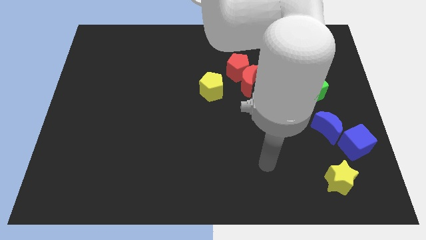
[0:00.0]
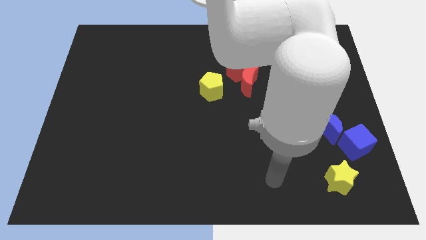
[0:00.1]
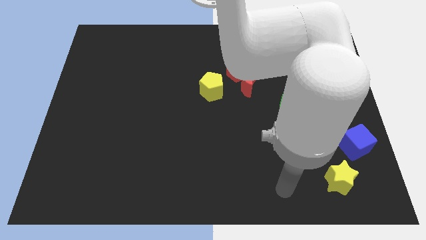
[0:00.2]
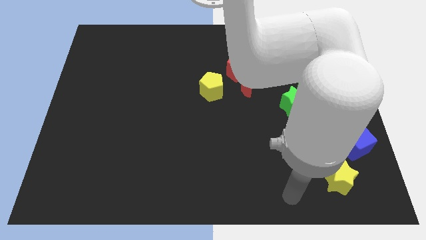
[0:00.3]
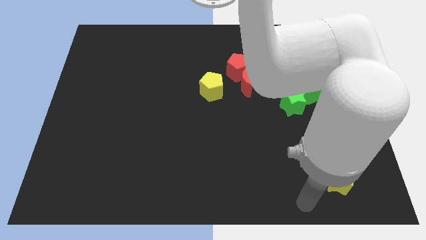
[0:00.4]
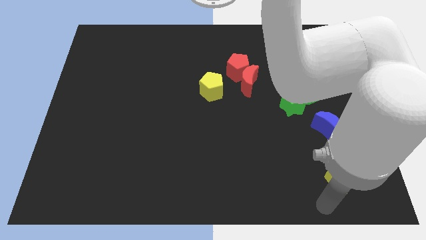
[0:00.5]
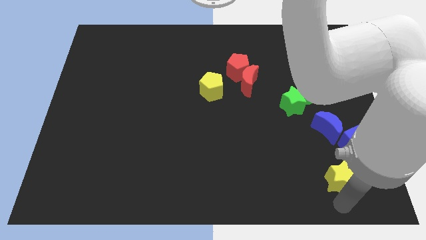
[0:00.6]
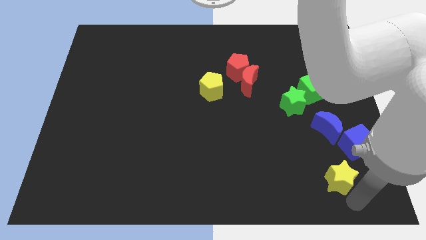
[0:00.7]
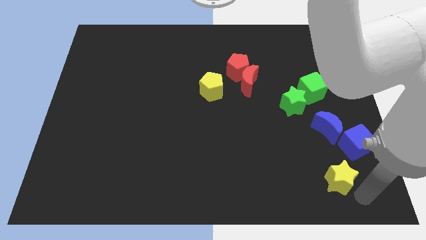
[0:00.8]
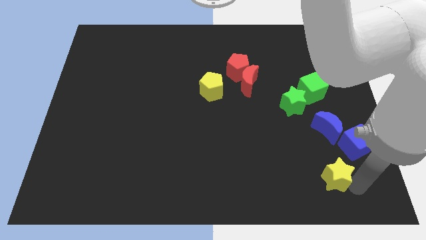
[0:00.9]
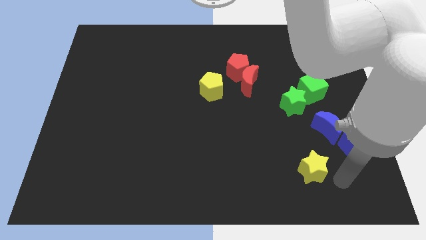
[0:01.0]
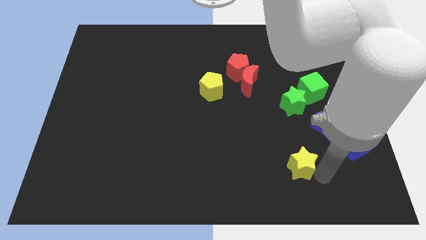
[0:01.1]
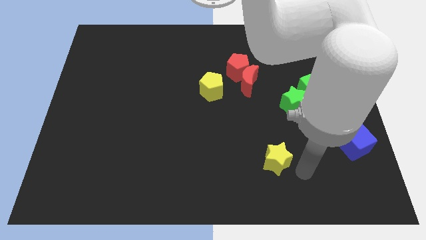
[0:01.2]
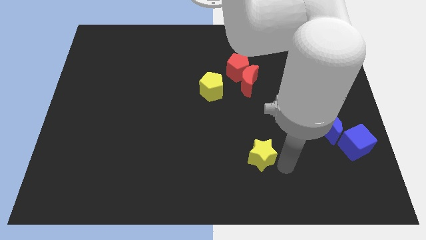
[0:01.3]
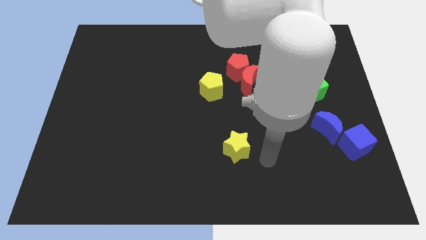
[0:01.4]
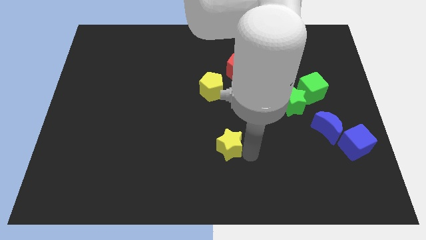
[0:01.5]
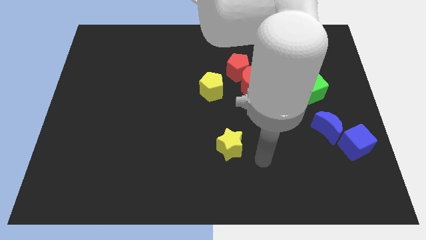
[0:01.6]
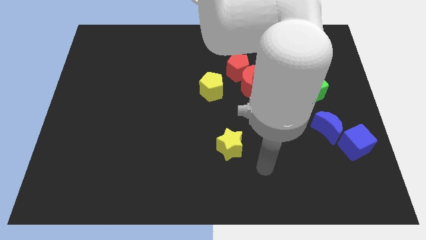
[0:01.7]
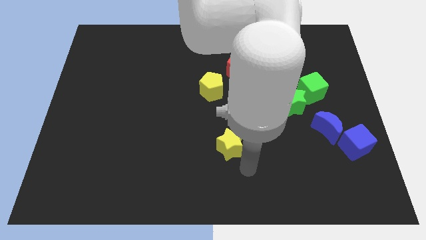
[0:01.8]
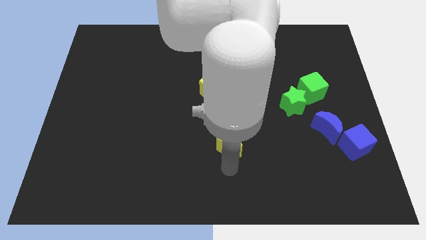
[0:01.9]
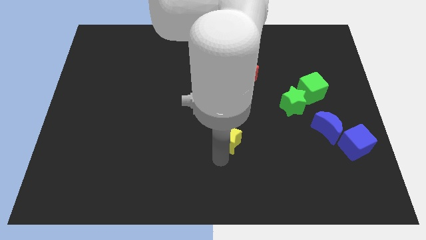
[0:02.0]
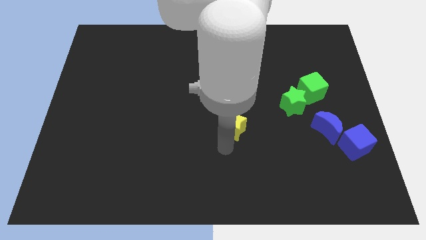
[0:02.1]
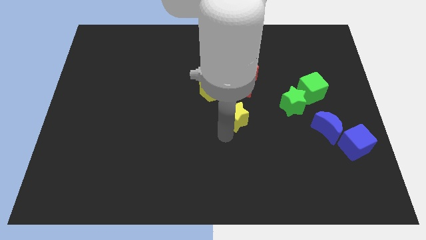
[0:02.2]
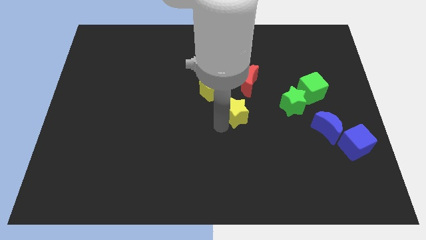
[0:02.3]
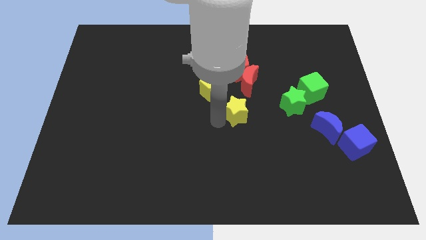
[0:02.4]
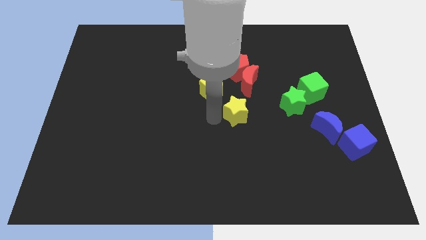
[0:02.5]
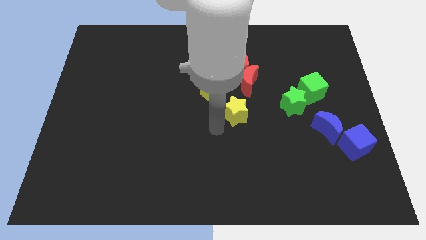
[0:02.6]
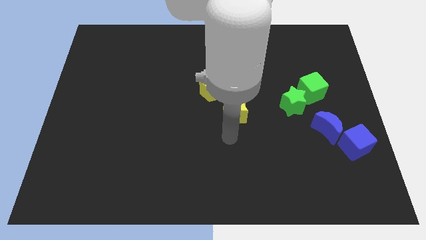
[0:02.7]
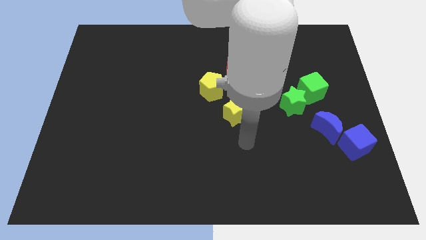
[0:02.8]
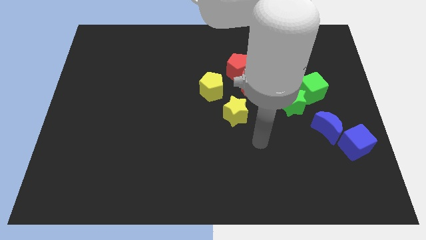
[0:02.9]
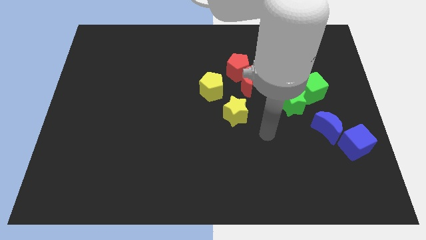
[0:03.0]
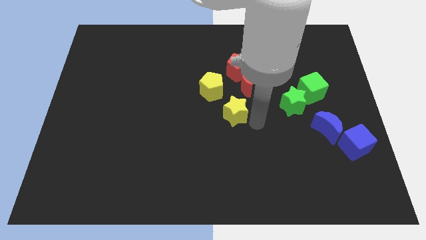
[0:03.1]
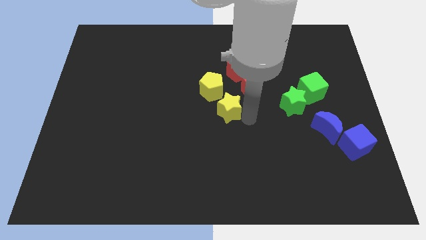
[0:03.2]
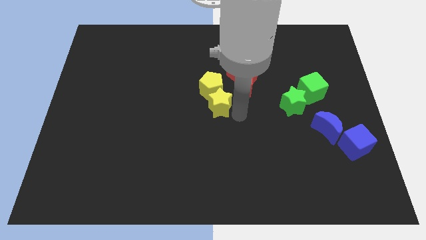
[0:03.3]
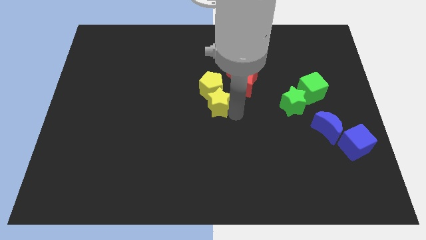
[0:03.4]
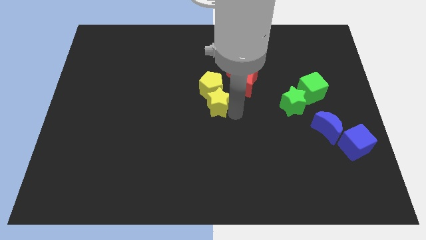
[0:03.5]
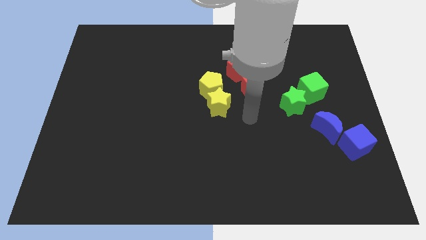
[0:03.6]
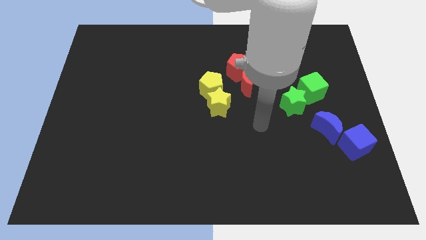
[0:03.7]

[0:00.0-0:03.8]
drag yellow star towards yellow pentagon

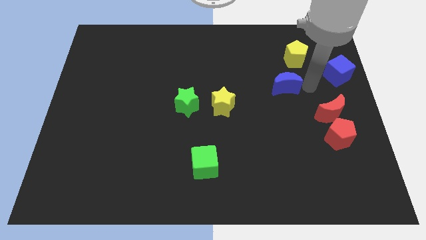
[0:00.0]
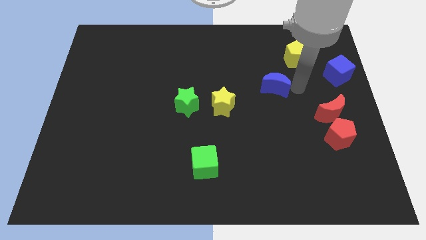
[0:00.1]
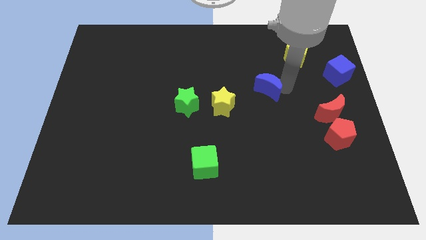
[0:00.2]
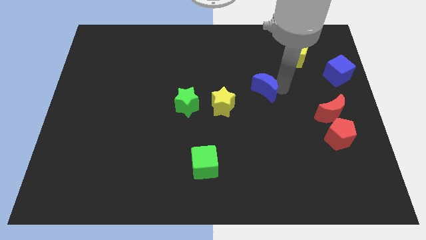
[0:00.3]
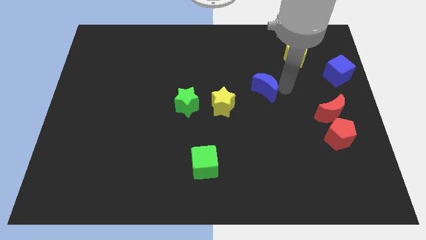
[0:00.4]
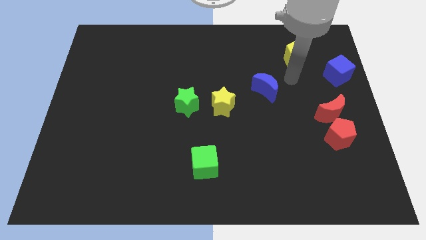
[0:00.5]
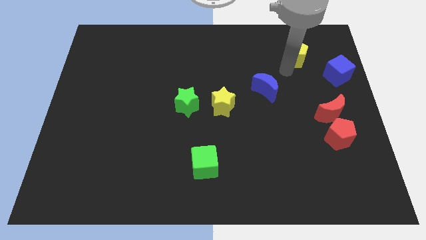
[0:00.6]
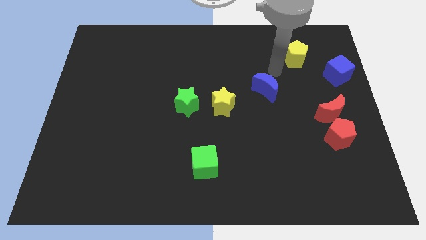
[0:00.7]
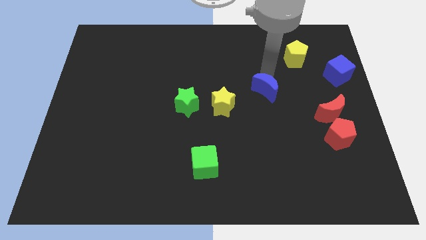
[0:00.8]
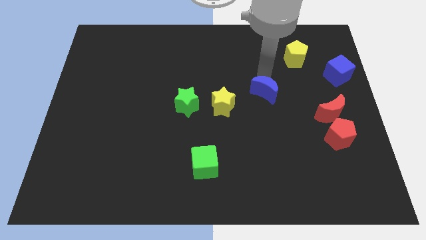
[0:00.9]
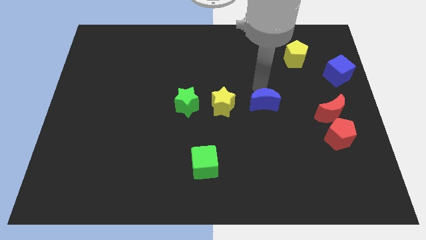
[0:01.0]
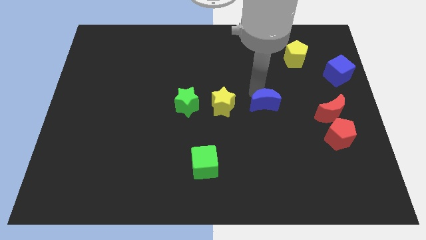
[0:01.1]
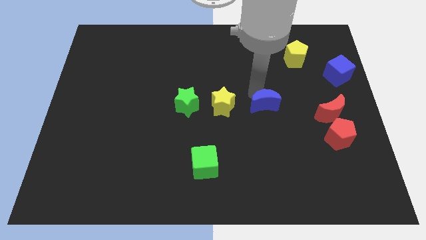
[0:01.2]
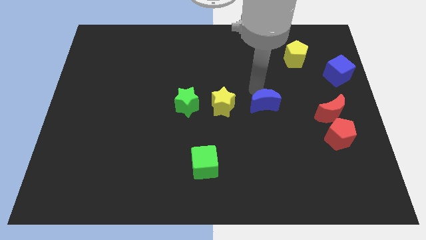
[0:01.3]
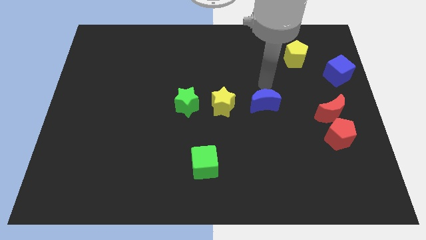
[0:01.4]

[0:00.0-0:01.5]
push the blue moon slightly downwards

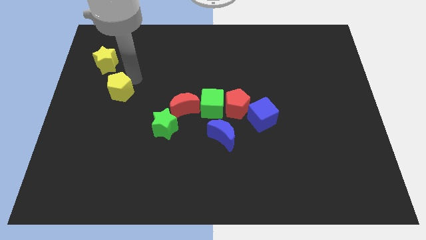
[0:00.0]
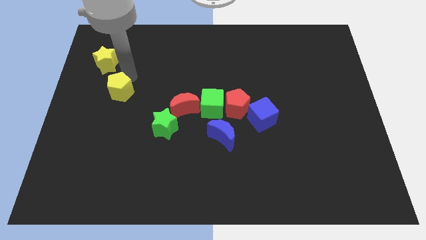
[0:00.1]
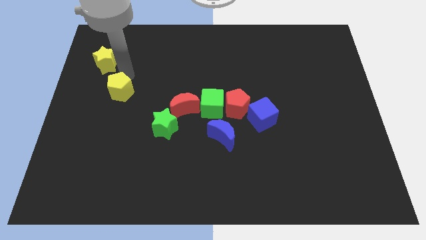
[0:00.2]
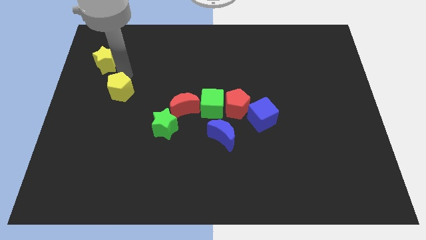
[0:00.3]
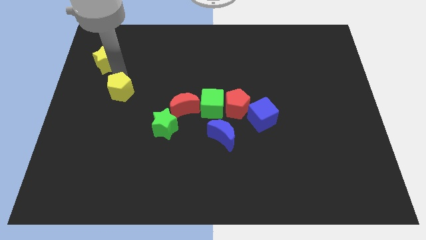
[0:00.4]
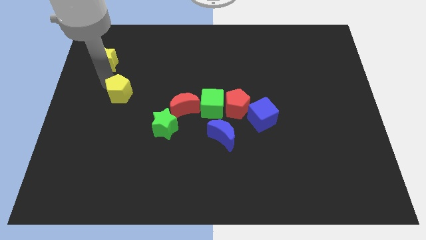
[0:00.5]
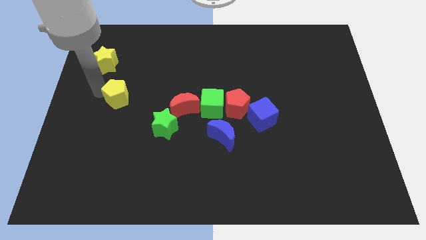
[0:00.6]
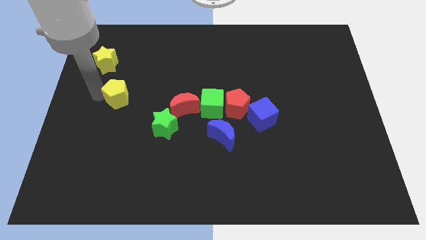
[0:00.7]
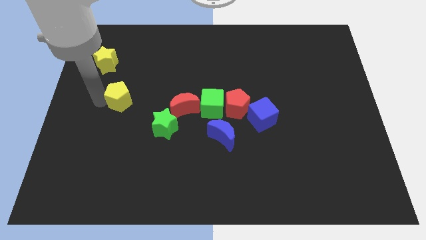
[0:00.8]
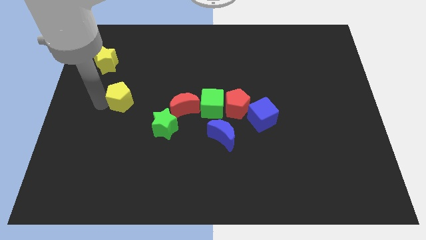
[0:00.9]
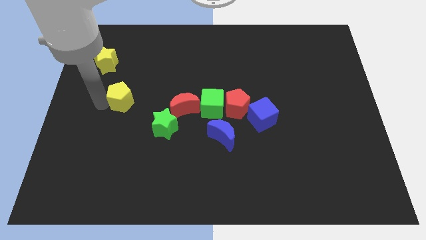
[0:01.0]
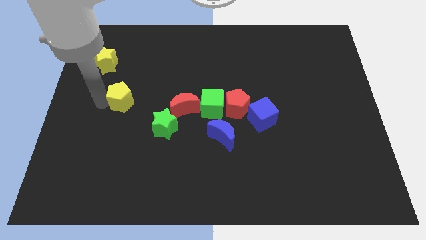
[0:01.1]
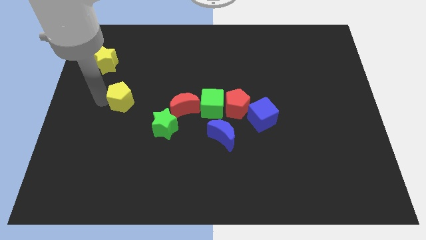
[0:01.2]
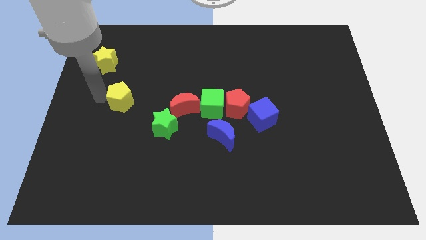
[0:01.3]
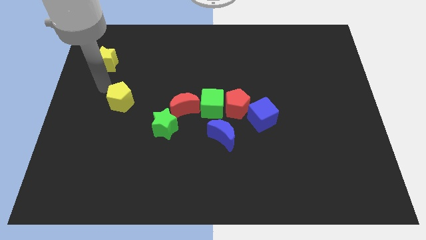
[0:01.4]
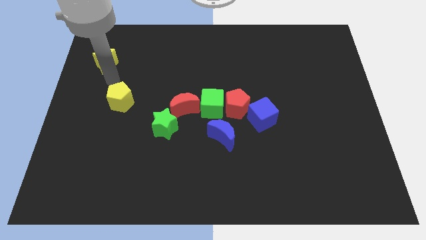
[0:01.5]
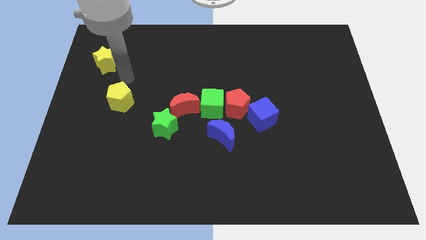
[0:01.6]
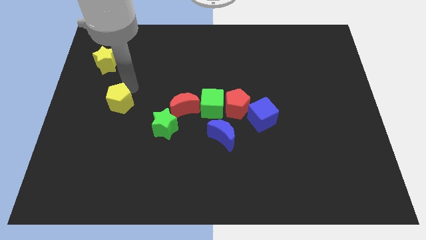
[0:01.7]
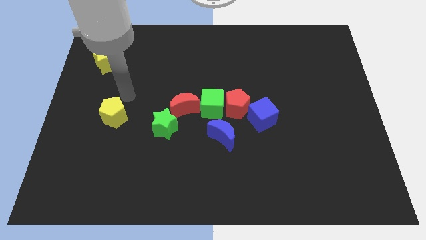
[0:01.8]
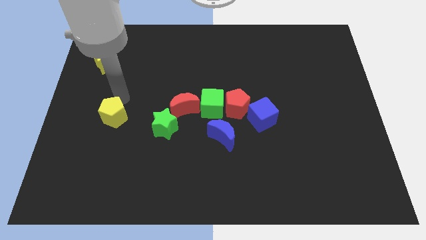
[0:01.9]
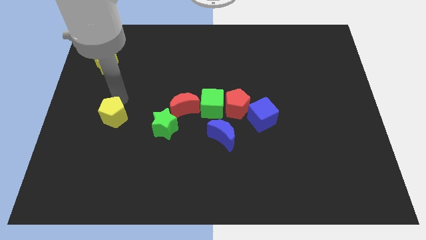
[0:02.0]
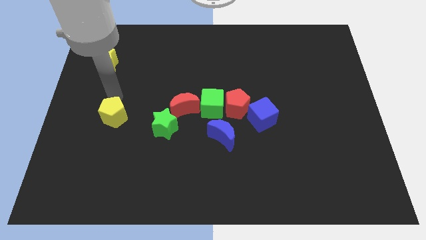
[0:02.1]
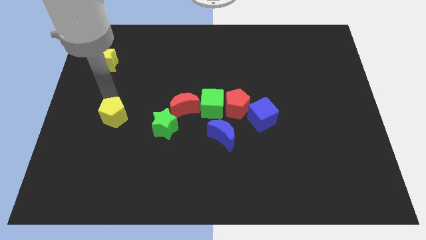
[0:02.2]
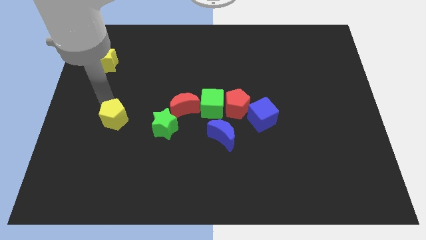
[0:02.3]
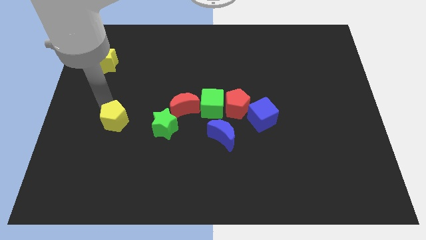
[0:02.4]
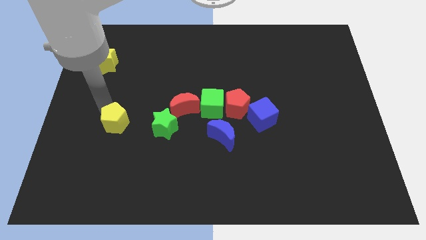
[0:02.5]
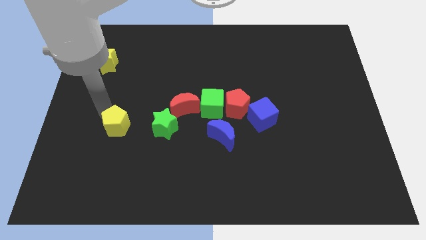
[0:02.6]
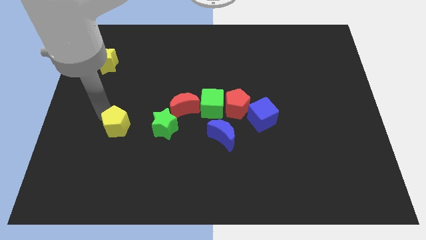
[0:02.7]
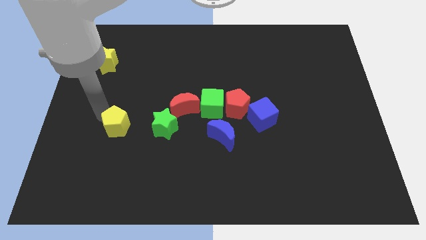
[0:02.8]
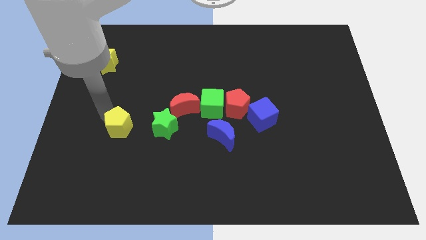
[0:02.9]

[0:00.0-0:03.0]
move the yellow pentagon to the parallel left of the green star

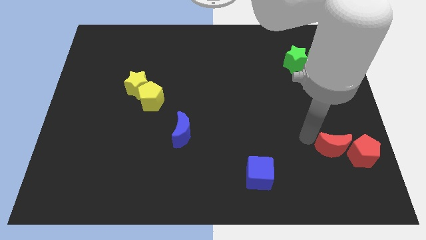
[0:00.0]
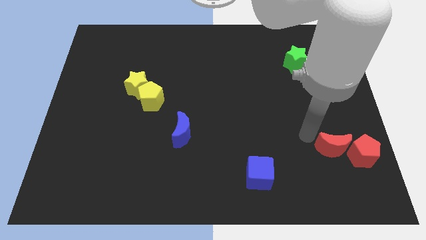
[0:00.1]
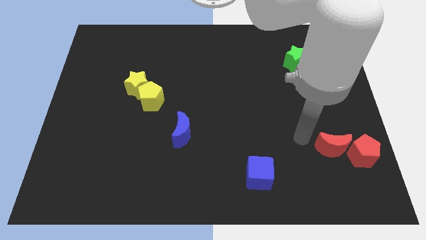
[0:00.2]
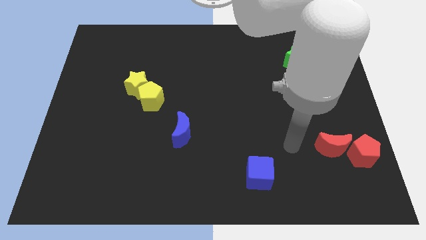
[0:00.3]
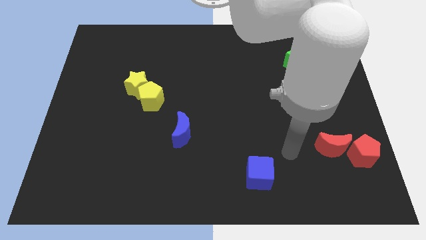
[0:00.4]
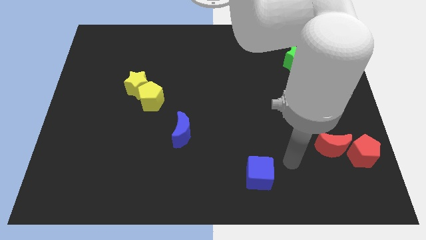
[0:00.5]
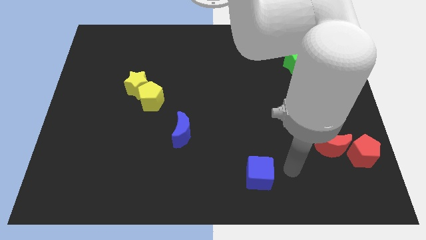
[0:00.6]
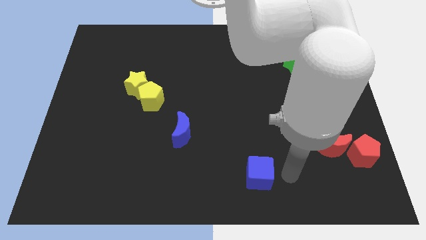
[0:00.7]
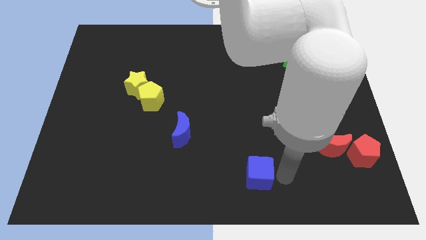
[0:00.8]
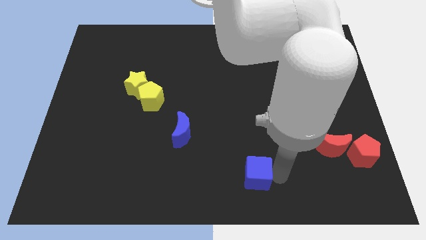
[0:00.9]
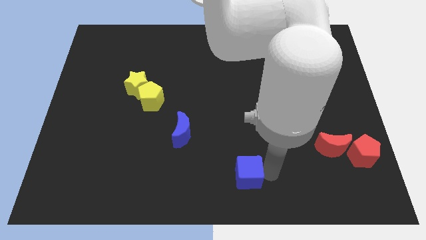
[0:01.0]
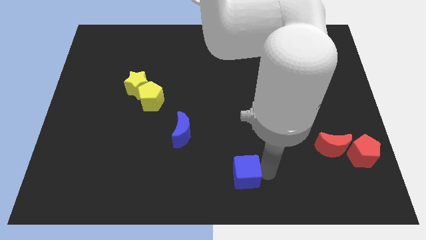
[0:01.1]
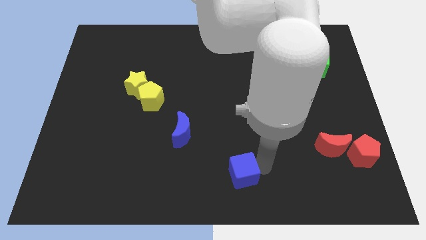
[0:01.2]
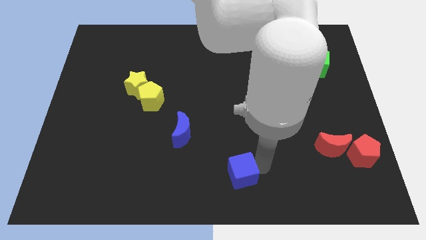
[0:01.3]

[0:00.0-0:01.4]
move blue cube slightly to the center
